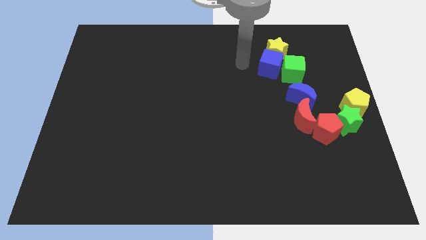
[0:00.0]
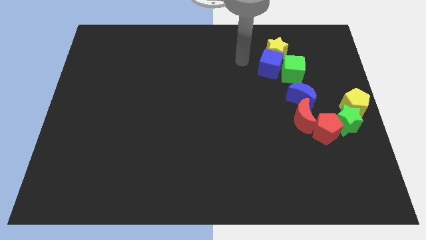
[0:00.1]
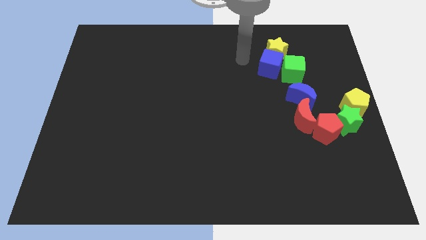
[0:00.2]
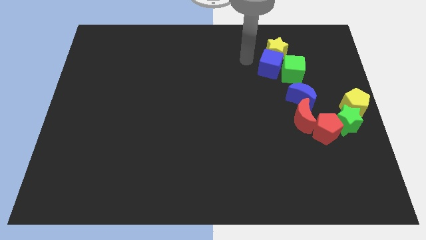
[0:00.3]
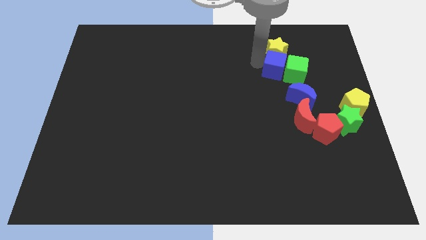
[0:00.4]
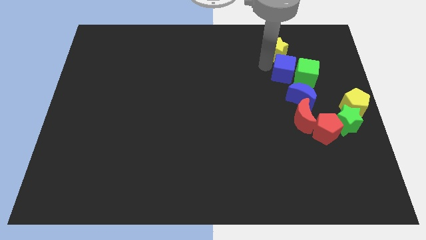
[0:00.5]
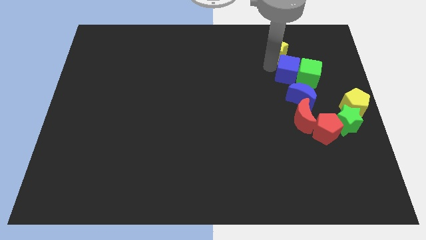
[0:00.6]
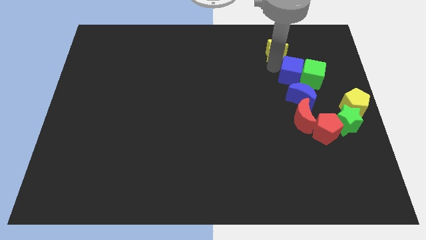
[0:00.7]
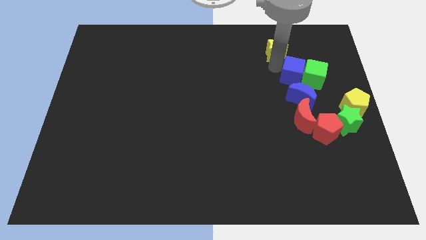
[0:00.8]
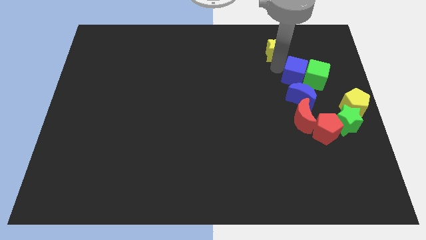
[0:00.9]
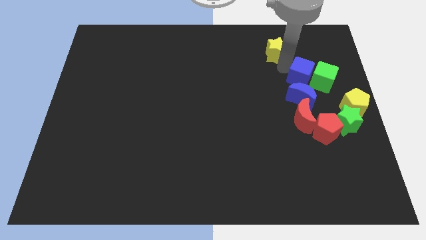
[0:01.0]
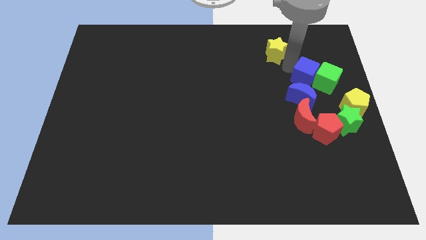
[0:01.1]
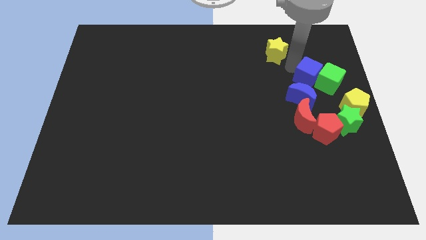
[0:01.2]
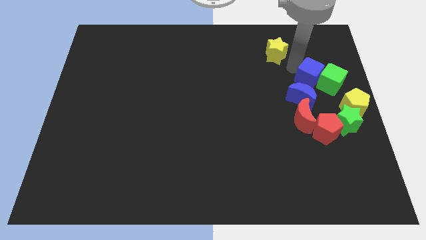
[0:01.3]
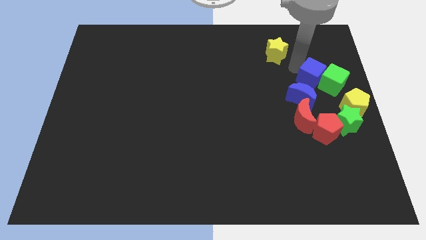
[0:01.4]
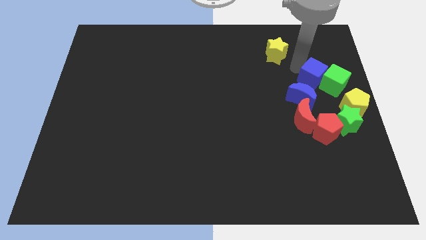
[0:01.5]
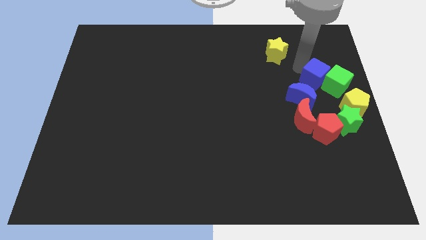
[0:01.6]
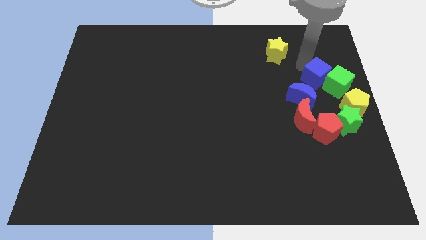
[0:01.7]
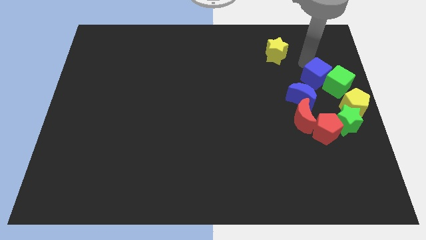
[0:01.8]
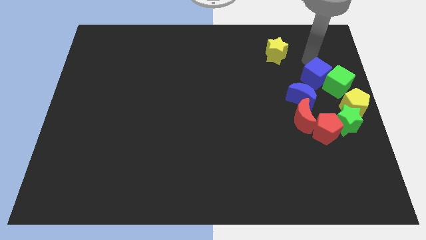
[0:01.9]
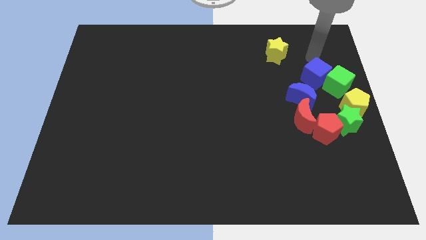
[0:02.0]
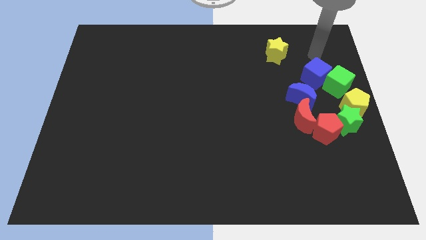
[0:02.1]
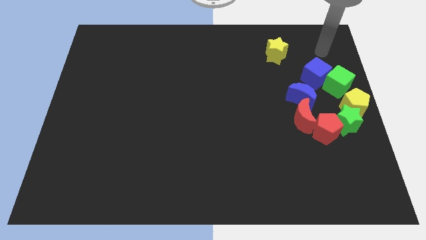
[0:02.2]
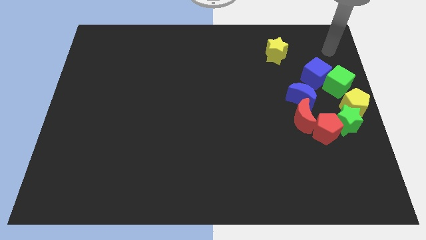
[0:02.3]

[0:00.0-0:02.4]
place the blue cube diagonally top right to the blue moon

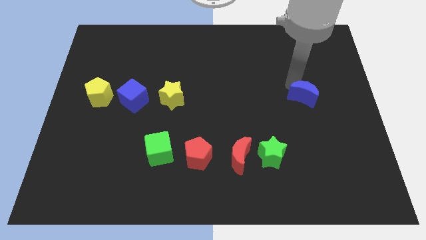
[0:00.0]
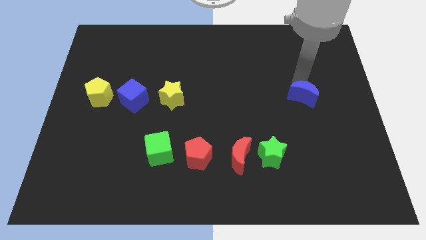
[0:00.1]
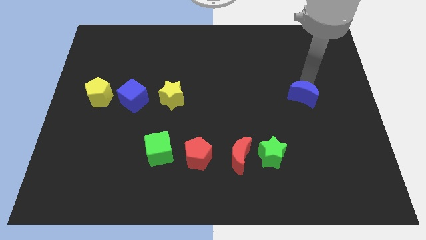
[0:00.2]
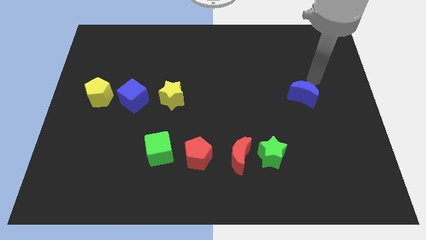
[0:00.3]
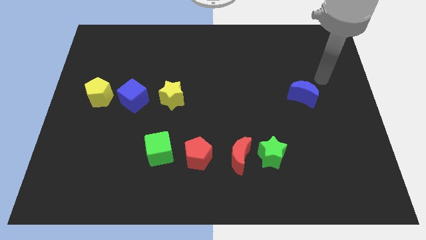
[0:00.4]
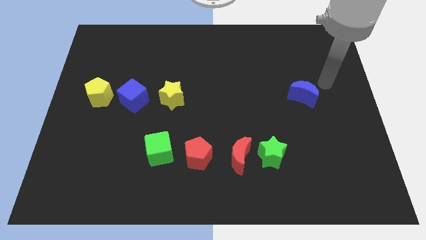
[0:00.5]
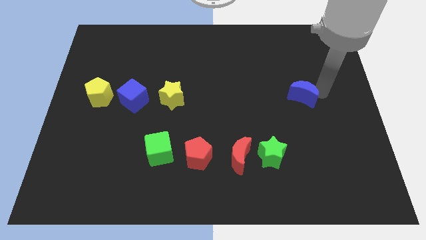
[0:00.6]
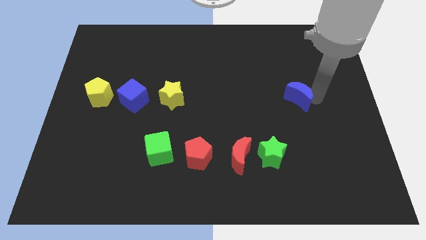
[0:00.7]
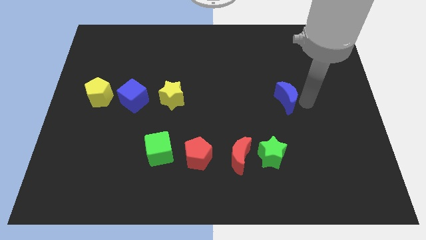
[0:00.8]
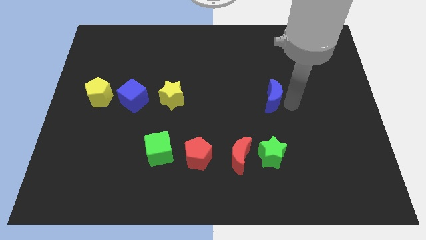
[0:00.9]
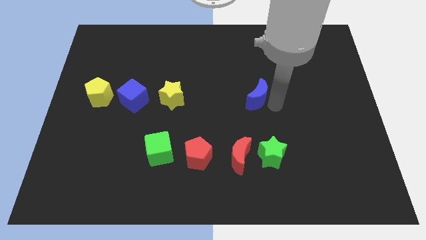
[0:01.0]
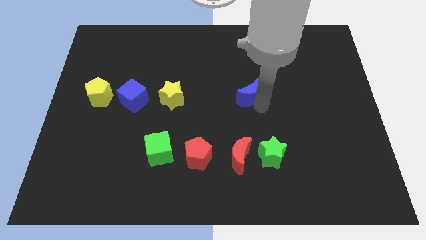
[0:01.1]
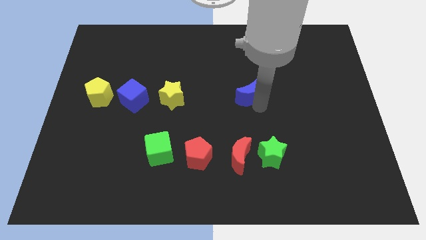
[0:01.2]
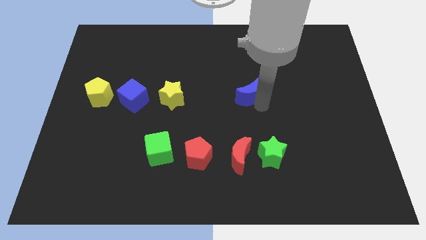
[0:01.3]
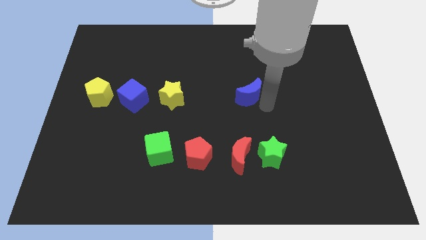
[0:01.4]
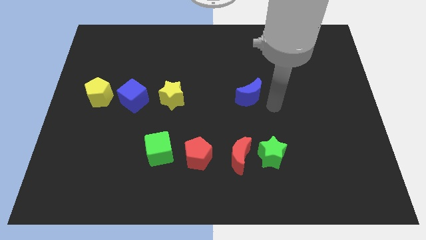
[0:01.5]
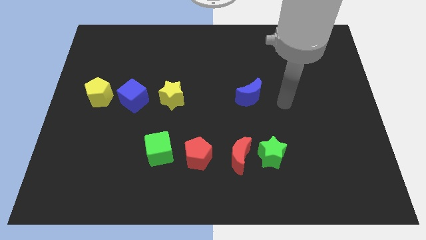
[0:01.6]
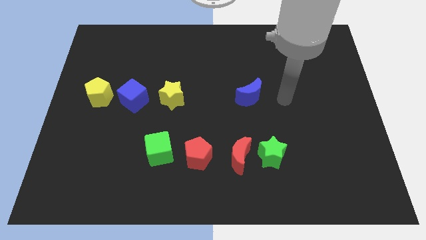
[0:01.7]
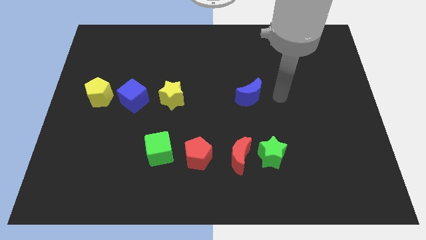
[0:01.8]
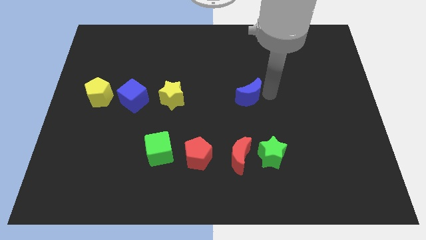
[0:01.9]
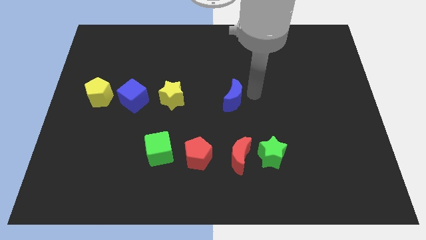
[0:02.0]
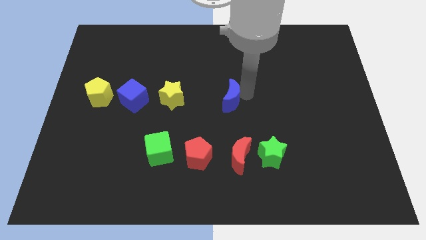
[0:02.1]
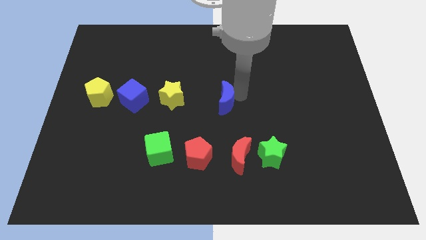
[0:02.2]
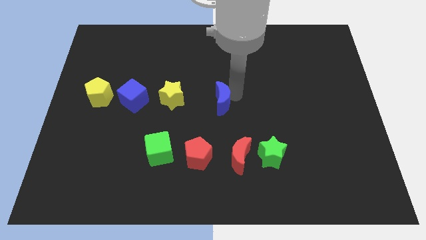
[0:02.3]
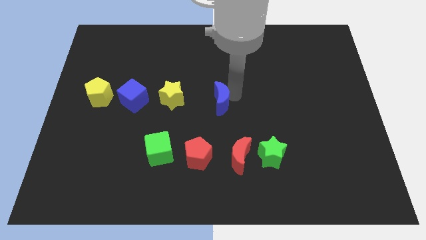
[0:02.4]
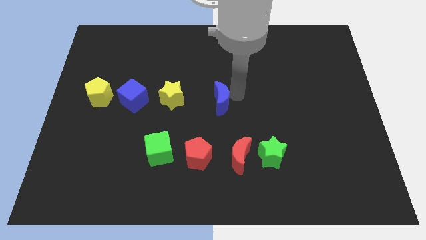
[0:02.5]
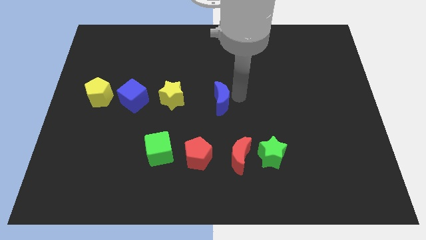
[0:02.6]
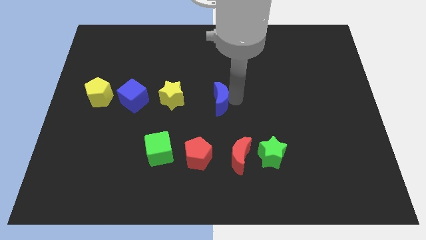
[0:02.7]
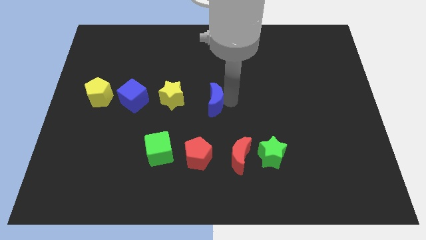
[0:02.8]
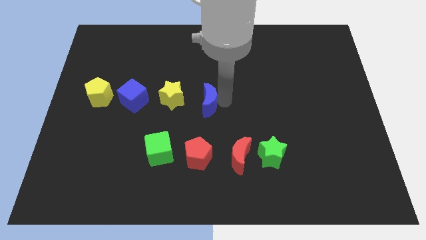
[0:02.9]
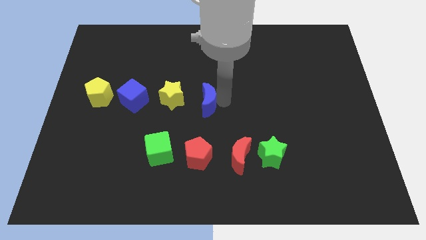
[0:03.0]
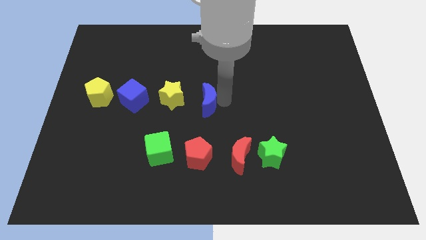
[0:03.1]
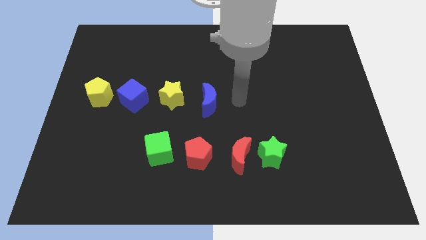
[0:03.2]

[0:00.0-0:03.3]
slide the blue crescent towards the yellow star

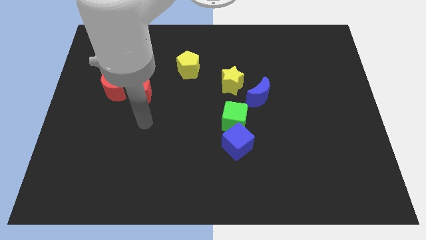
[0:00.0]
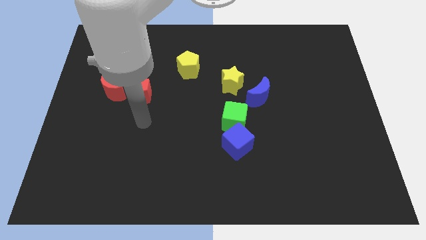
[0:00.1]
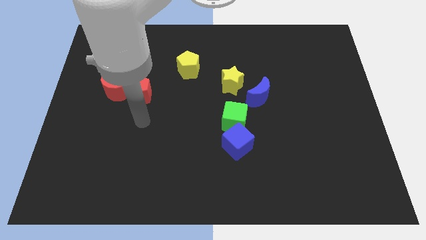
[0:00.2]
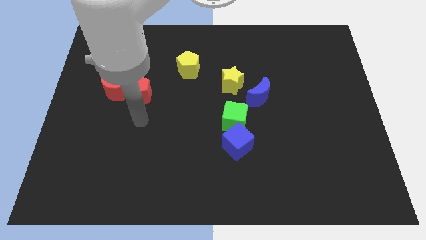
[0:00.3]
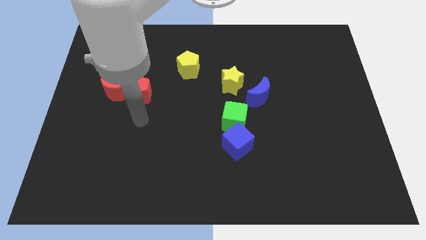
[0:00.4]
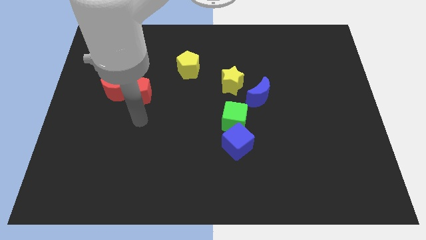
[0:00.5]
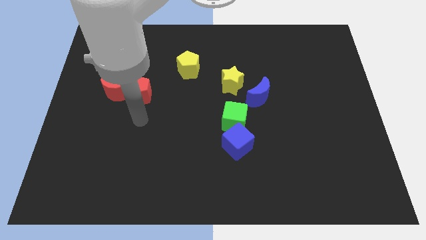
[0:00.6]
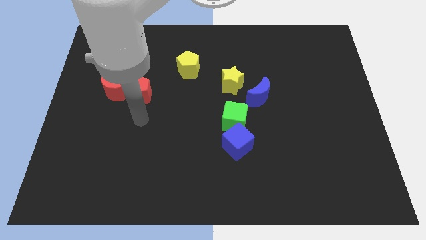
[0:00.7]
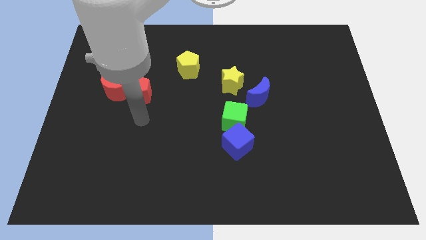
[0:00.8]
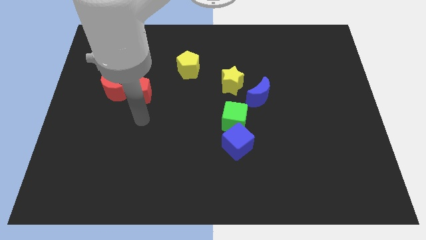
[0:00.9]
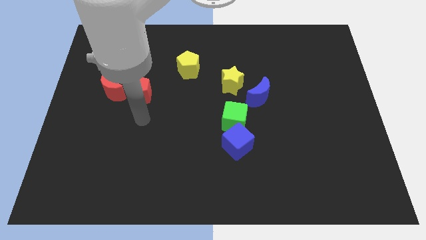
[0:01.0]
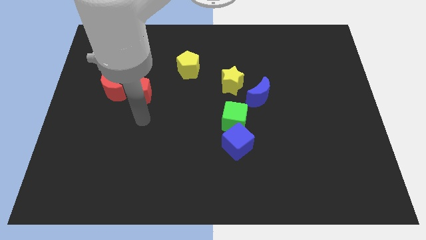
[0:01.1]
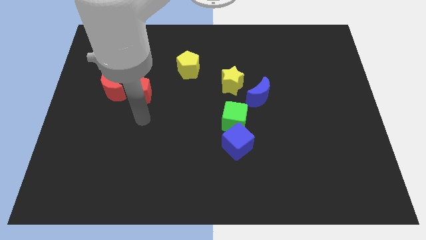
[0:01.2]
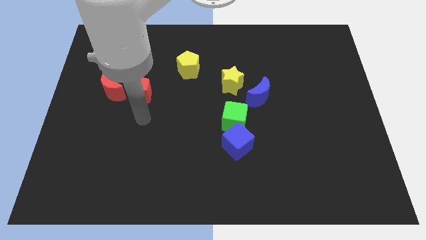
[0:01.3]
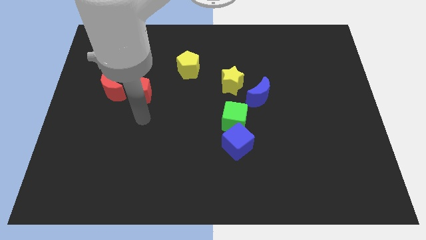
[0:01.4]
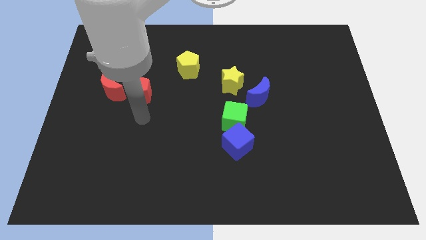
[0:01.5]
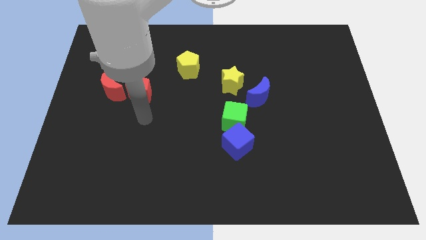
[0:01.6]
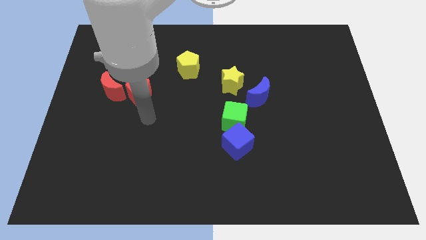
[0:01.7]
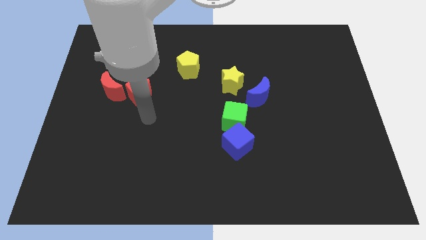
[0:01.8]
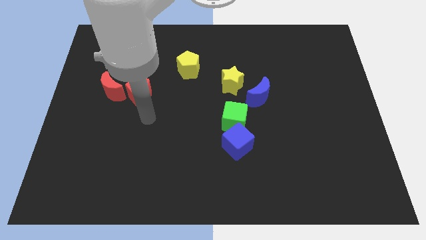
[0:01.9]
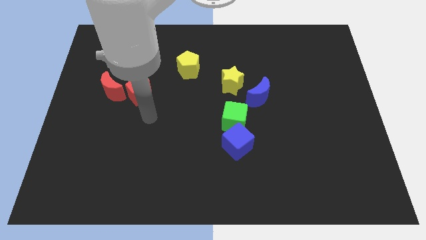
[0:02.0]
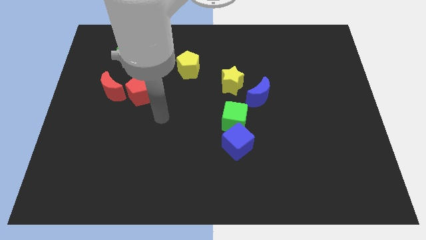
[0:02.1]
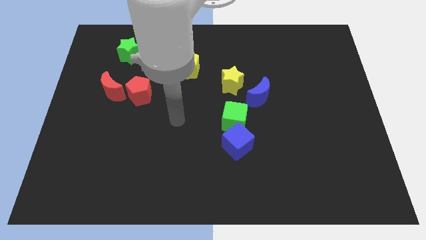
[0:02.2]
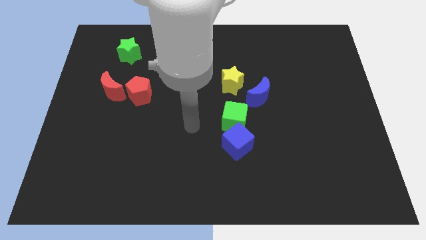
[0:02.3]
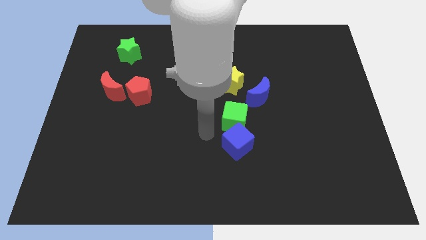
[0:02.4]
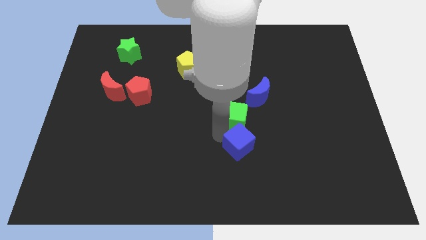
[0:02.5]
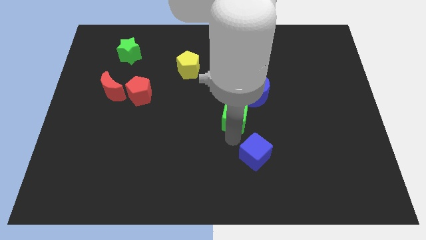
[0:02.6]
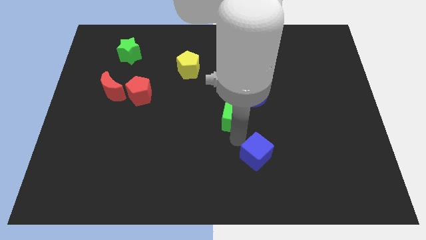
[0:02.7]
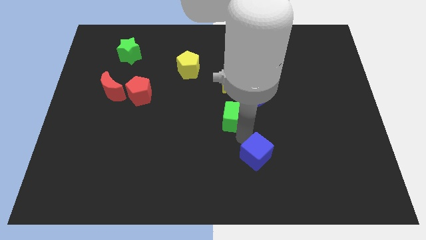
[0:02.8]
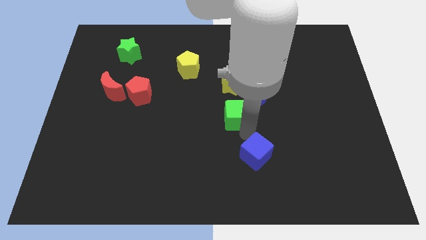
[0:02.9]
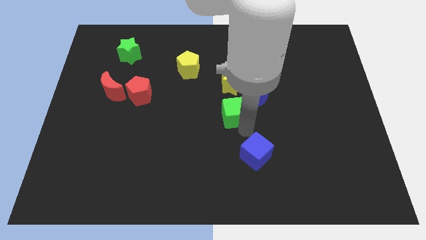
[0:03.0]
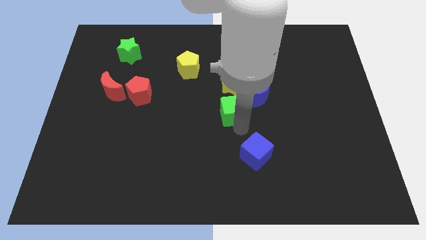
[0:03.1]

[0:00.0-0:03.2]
move blue cube slightly right
